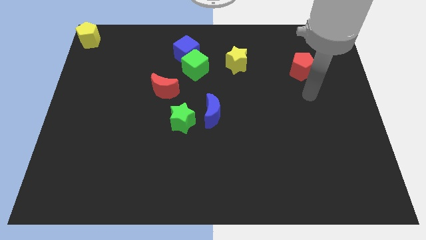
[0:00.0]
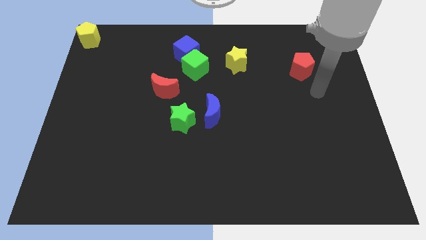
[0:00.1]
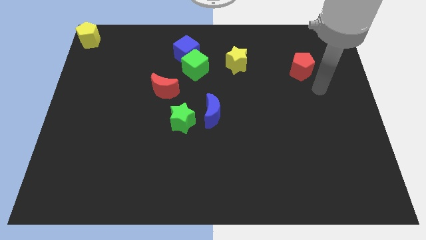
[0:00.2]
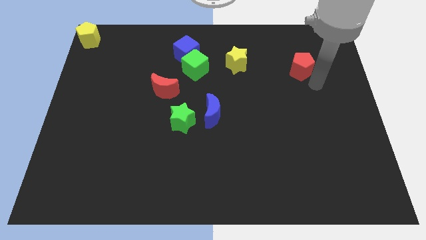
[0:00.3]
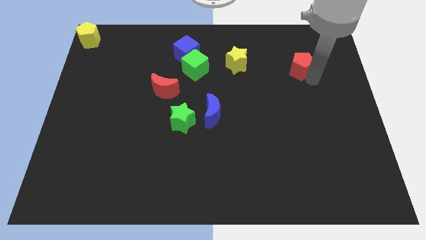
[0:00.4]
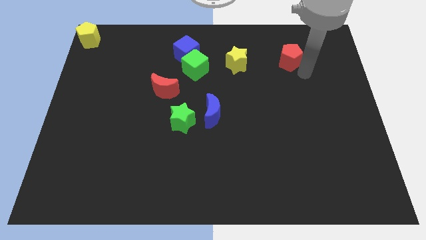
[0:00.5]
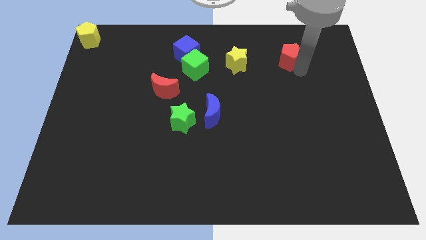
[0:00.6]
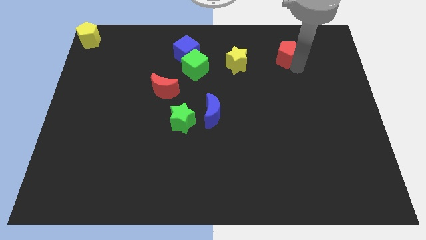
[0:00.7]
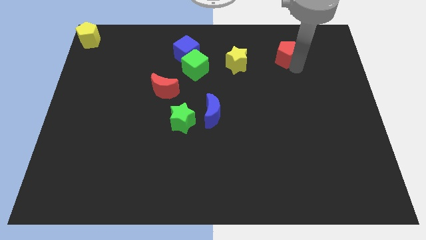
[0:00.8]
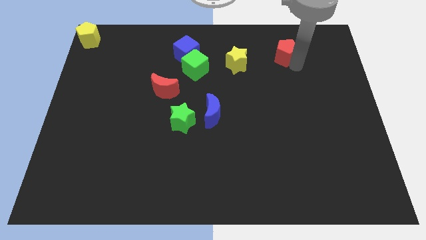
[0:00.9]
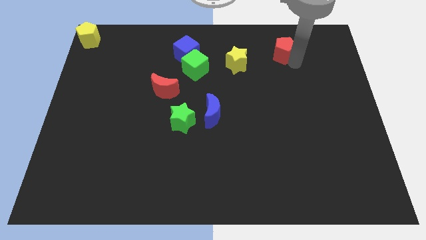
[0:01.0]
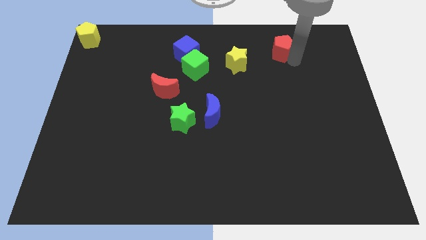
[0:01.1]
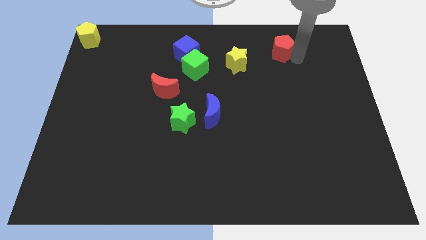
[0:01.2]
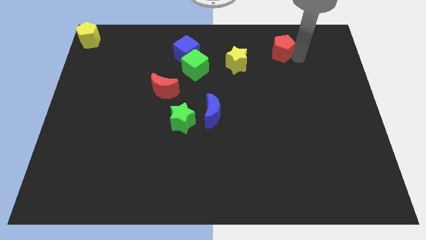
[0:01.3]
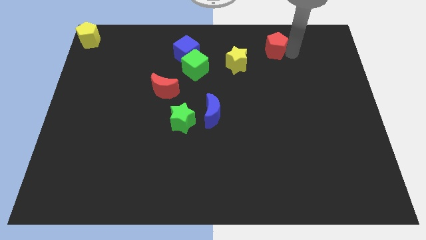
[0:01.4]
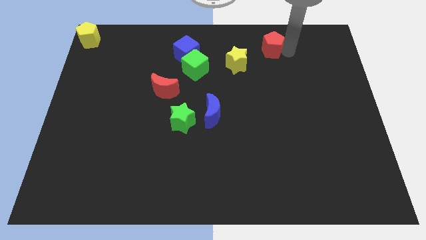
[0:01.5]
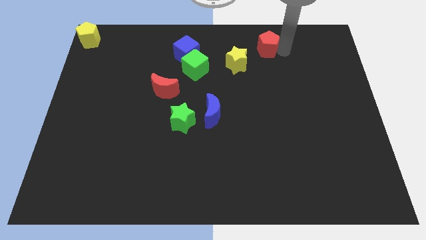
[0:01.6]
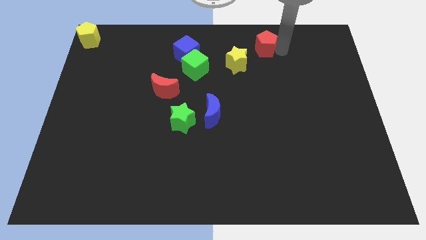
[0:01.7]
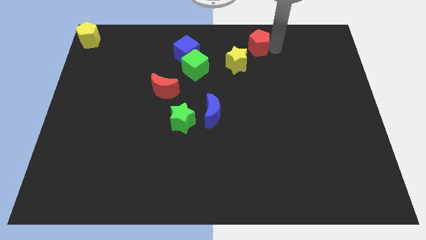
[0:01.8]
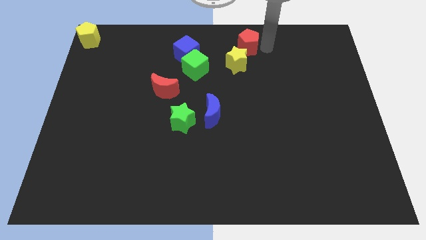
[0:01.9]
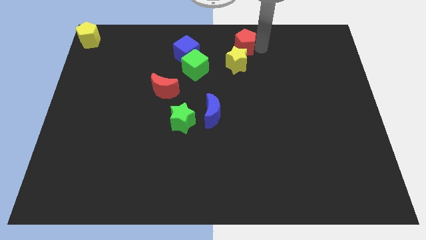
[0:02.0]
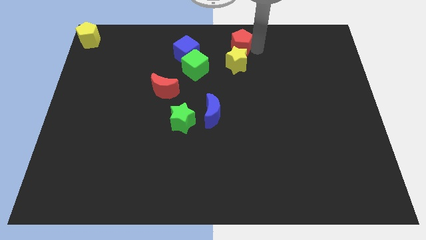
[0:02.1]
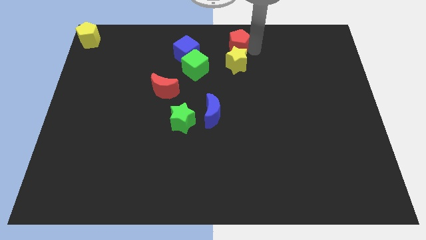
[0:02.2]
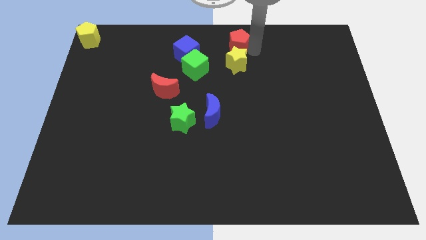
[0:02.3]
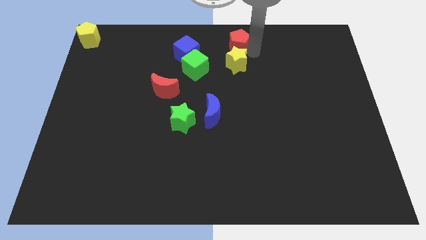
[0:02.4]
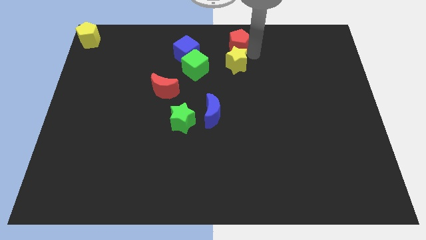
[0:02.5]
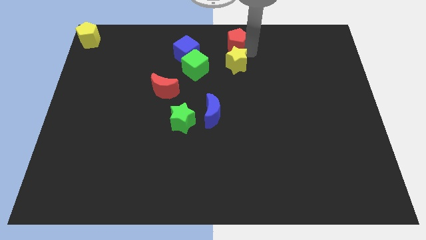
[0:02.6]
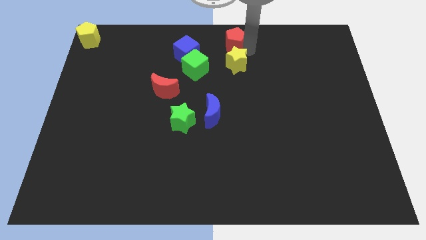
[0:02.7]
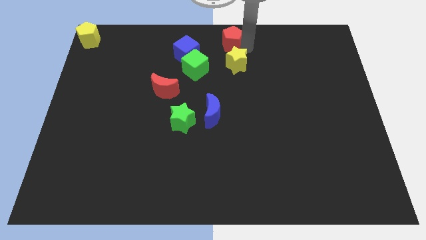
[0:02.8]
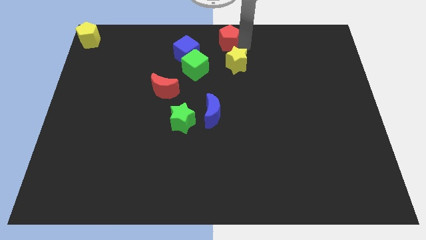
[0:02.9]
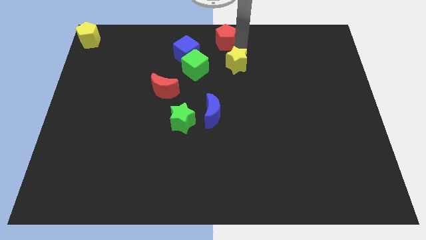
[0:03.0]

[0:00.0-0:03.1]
push red pentagon towards top center

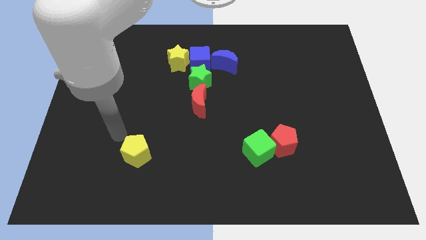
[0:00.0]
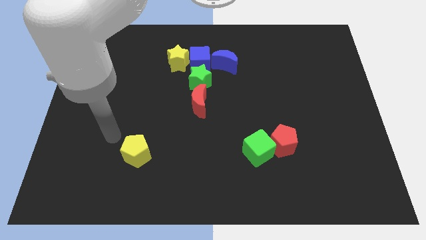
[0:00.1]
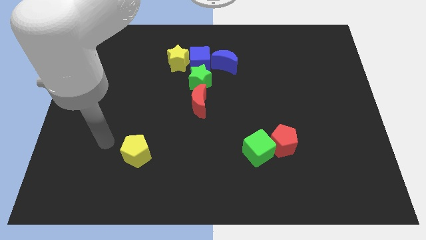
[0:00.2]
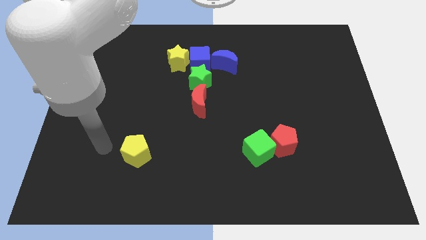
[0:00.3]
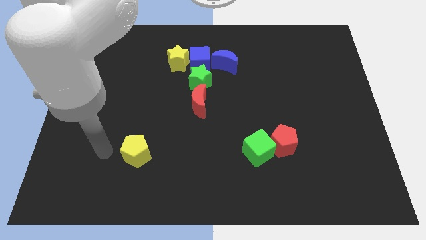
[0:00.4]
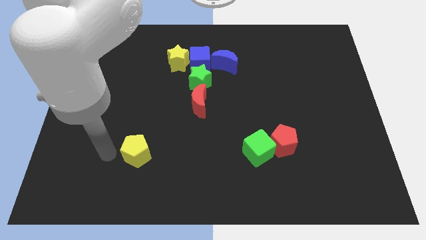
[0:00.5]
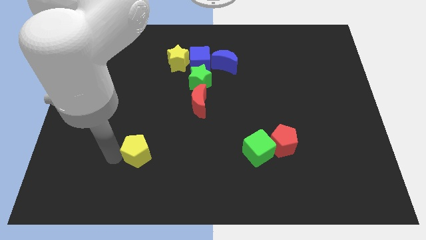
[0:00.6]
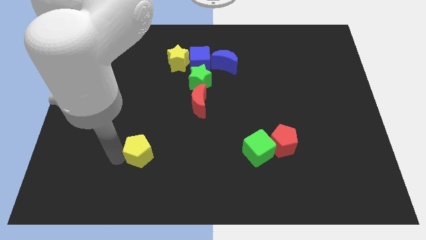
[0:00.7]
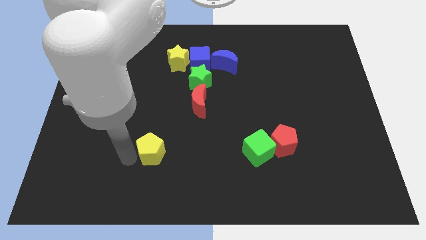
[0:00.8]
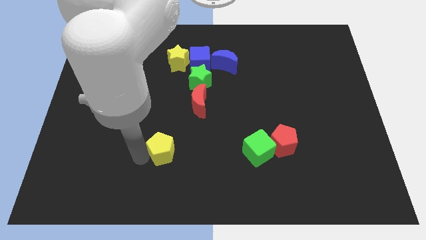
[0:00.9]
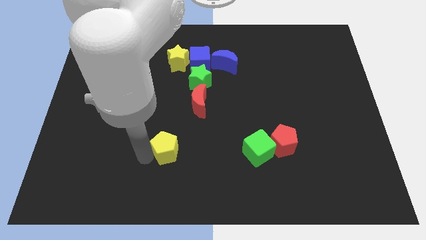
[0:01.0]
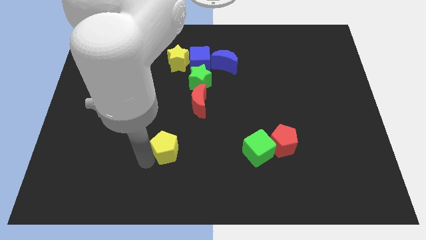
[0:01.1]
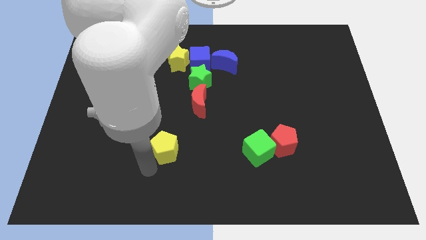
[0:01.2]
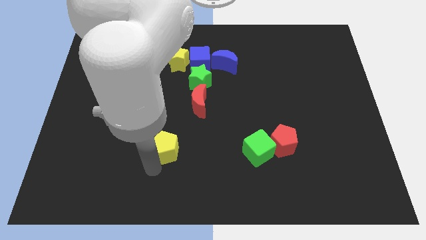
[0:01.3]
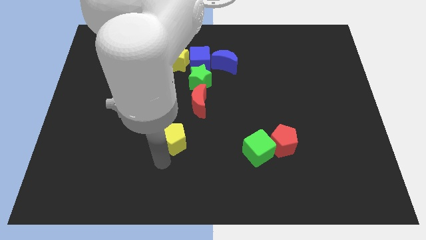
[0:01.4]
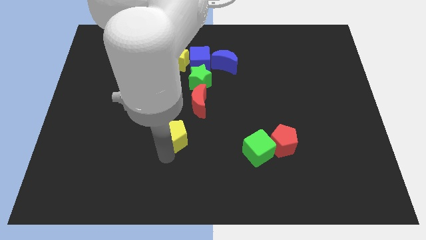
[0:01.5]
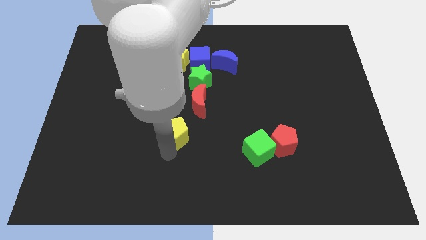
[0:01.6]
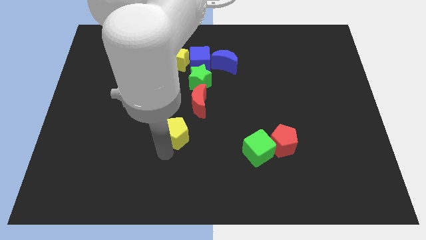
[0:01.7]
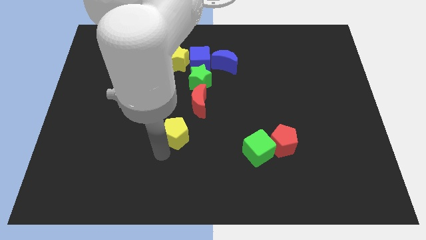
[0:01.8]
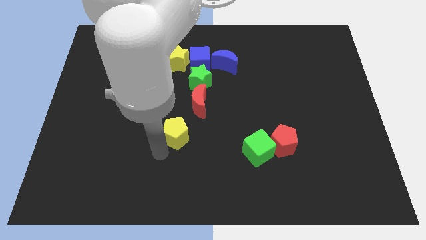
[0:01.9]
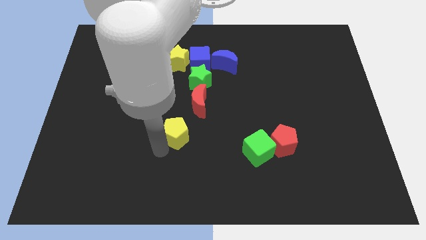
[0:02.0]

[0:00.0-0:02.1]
slide yellow pentagon below the red crescent

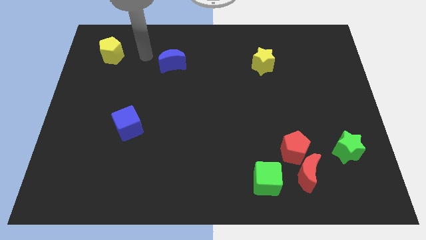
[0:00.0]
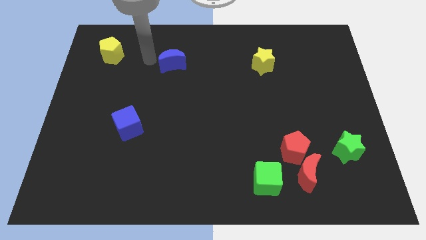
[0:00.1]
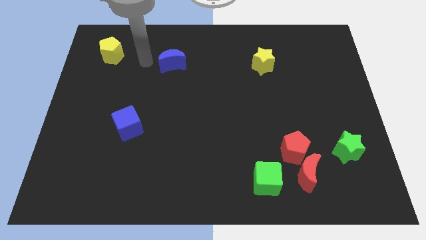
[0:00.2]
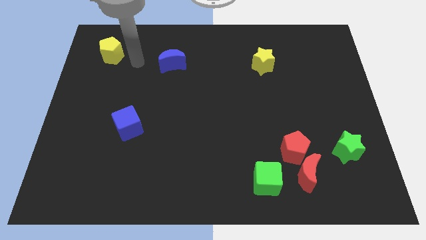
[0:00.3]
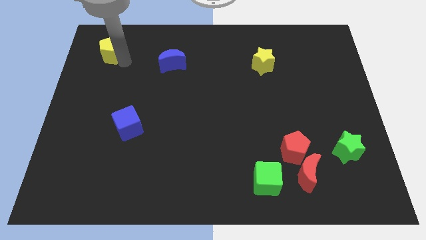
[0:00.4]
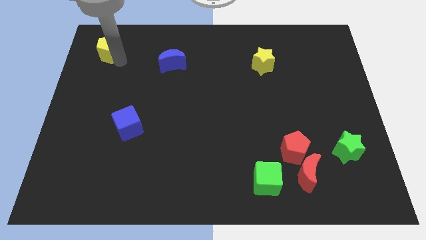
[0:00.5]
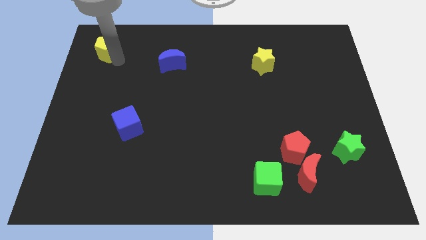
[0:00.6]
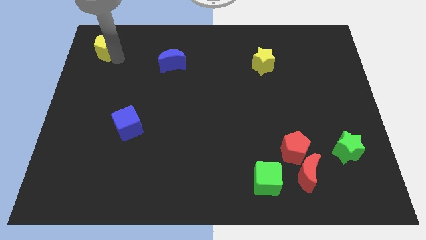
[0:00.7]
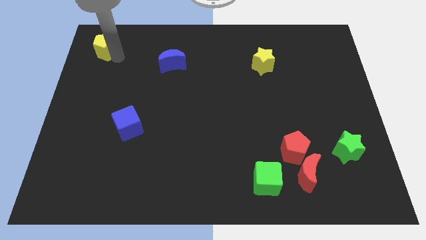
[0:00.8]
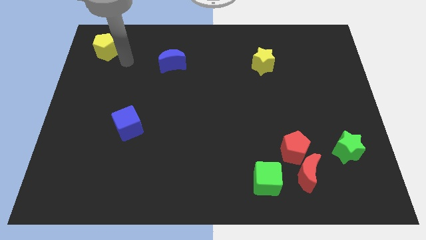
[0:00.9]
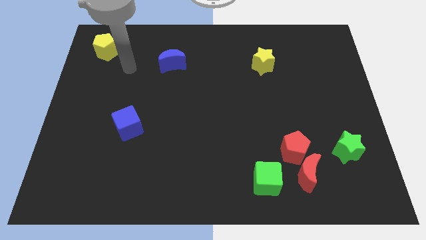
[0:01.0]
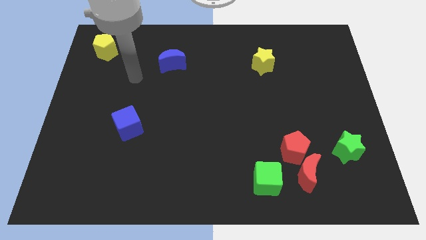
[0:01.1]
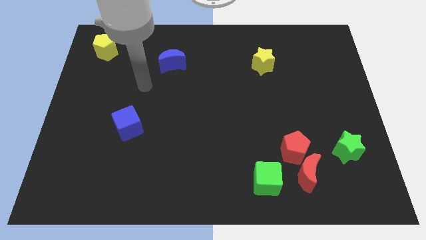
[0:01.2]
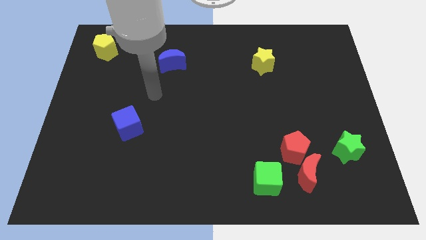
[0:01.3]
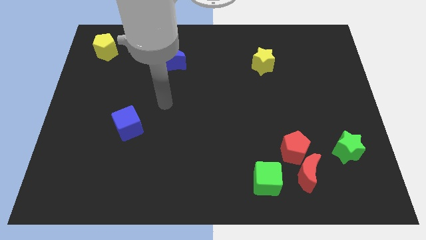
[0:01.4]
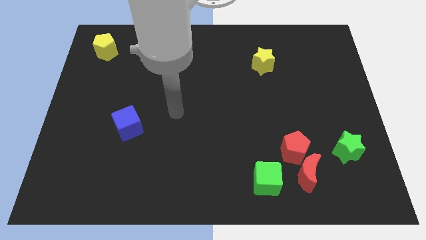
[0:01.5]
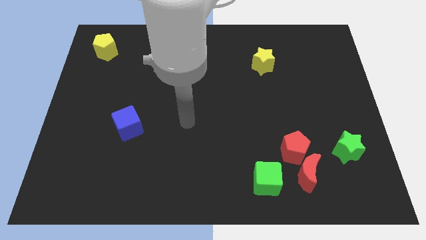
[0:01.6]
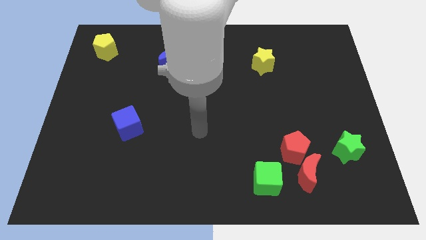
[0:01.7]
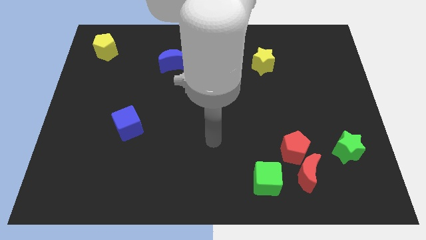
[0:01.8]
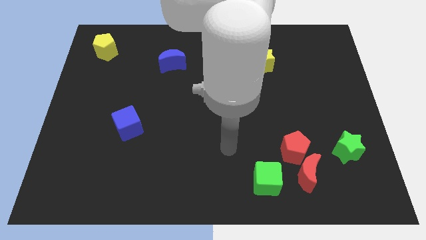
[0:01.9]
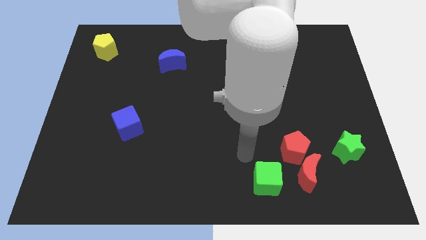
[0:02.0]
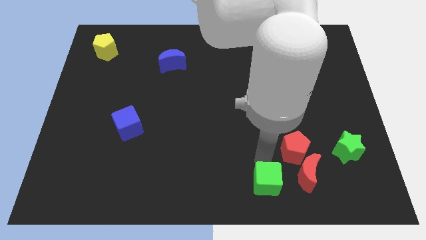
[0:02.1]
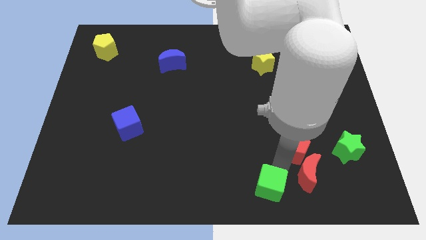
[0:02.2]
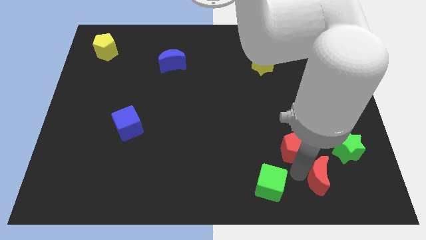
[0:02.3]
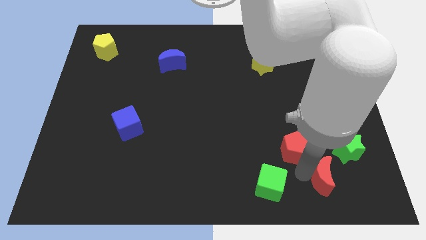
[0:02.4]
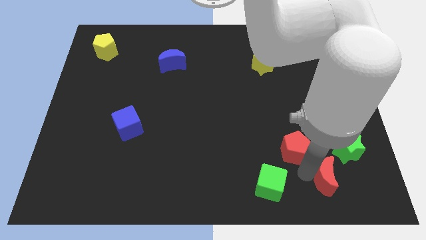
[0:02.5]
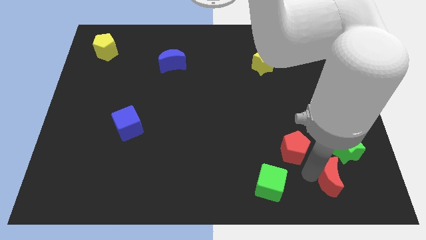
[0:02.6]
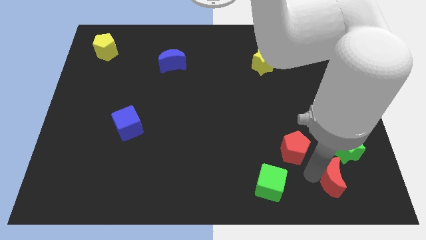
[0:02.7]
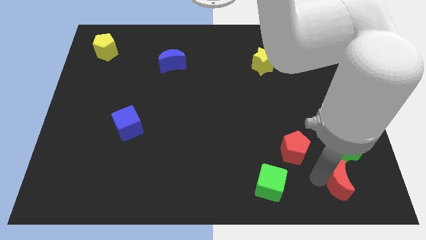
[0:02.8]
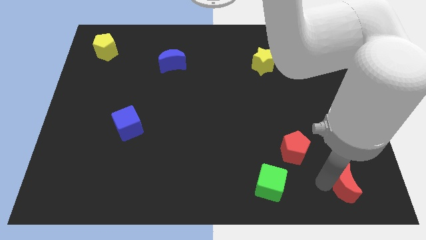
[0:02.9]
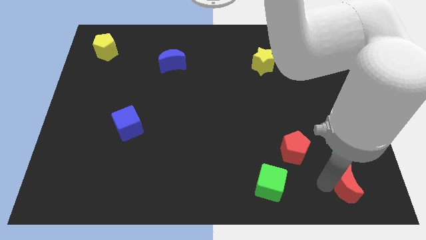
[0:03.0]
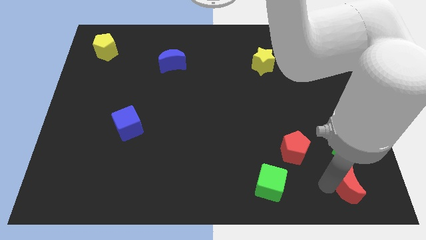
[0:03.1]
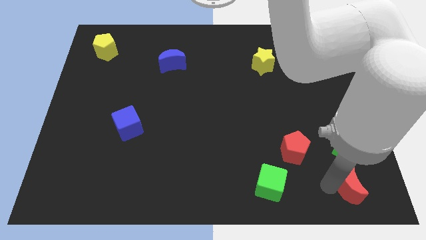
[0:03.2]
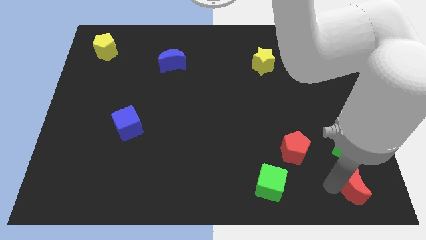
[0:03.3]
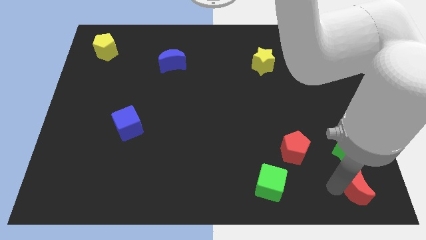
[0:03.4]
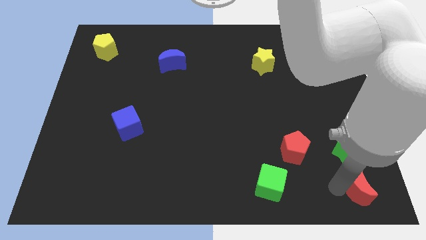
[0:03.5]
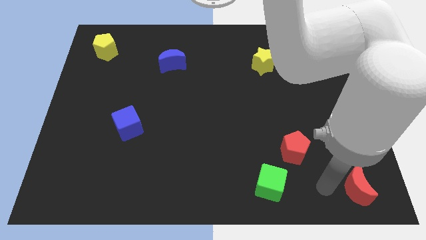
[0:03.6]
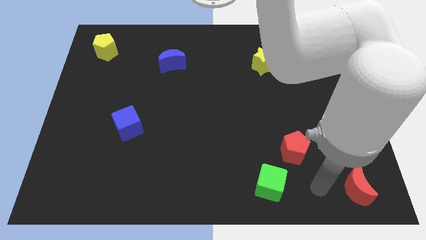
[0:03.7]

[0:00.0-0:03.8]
separate the red moon from the red pentagon
